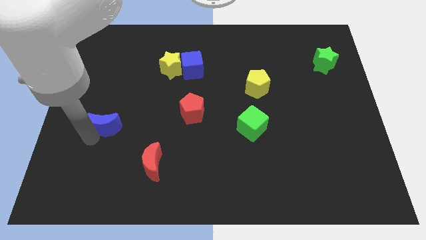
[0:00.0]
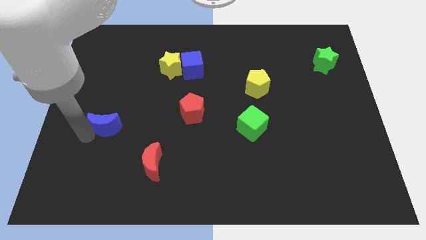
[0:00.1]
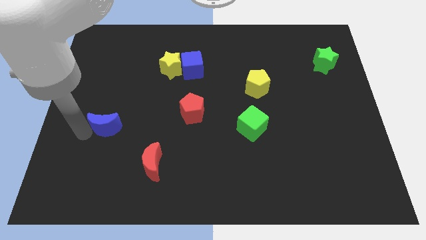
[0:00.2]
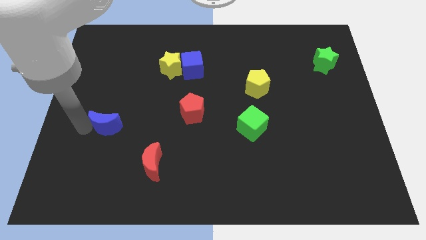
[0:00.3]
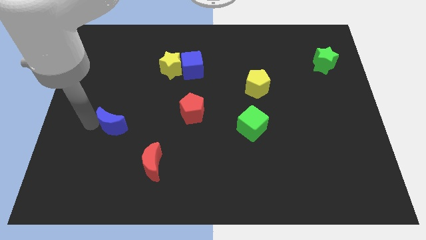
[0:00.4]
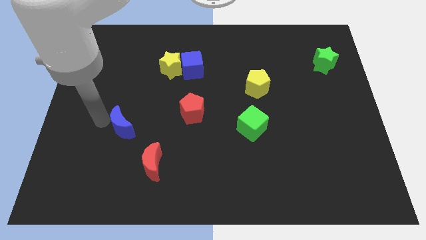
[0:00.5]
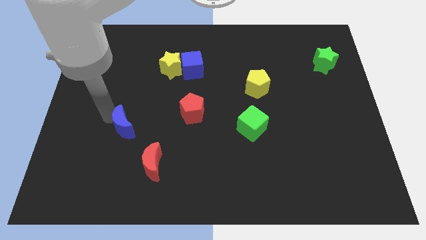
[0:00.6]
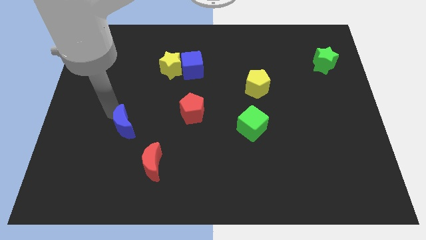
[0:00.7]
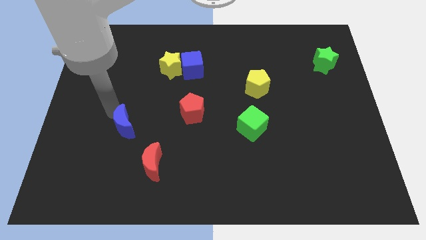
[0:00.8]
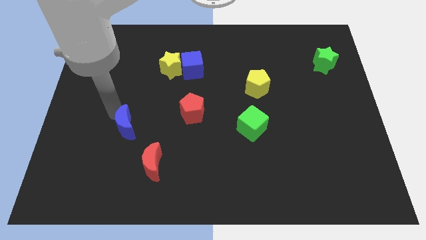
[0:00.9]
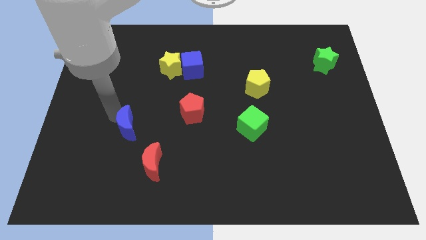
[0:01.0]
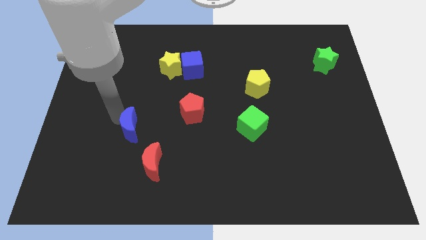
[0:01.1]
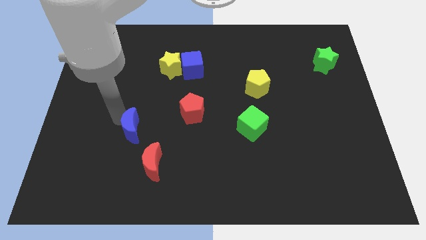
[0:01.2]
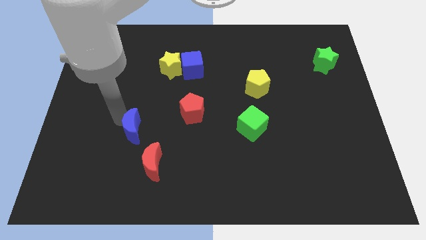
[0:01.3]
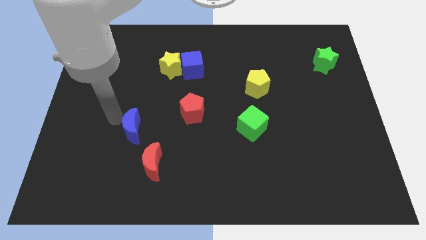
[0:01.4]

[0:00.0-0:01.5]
slightly move the blue moon close to the red moon

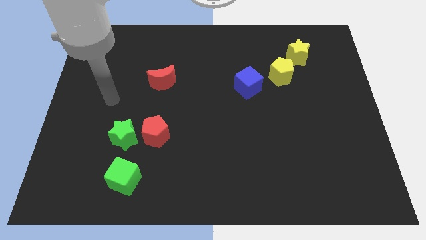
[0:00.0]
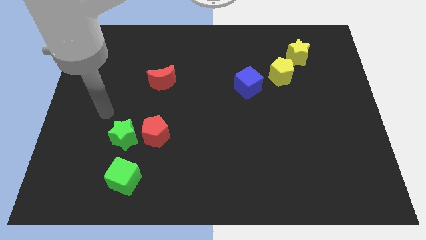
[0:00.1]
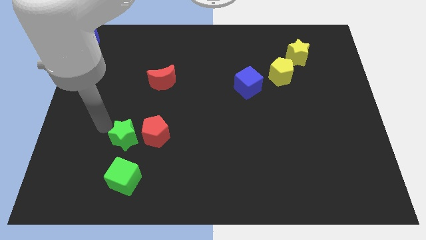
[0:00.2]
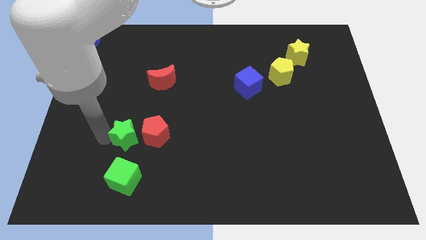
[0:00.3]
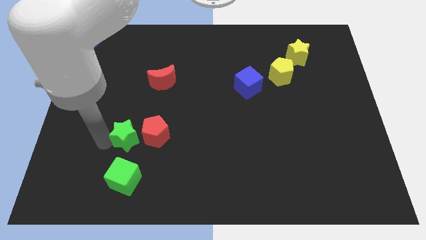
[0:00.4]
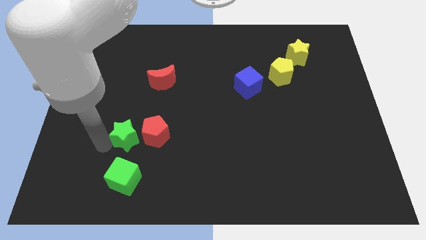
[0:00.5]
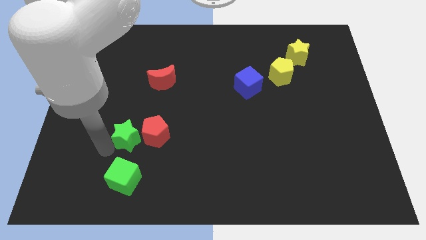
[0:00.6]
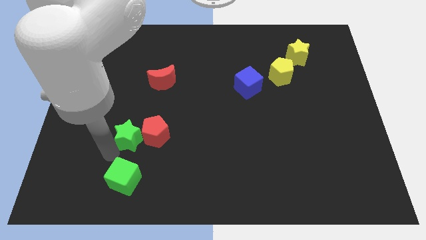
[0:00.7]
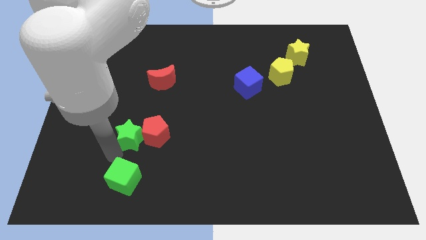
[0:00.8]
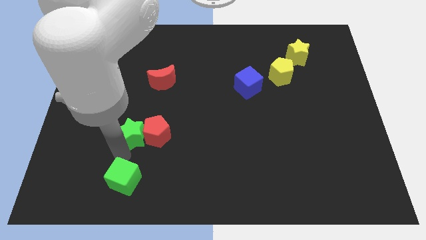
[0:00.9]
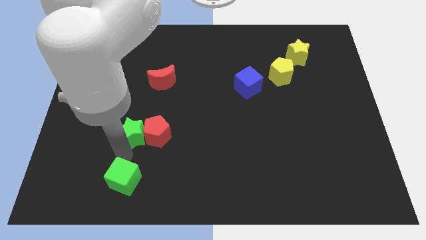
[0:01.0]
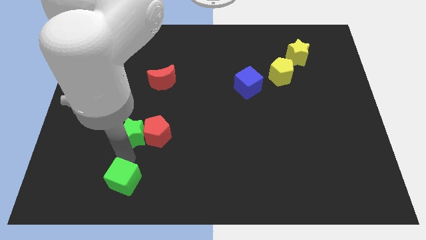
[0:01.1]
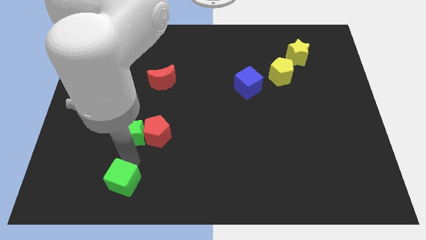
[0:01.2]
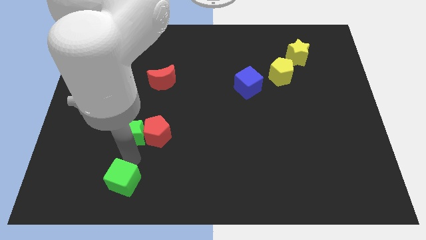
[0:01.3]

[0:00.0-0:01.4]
move the green star into the red pentagon

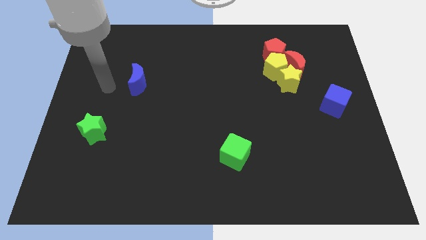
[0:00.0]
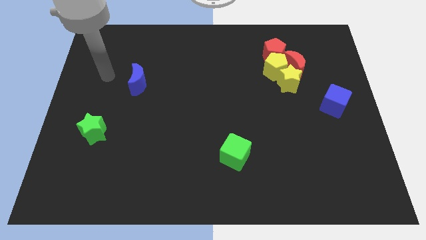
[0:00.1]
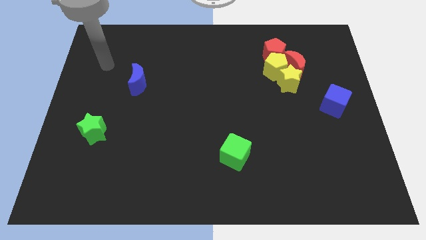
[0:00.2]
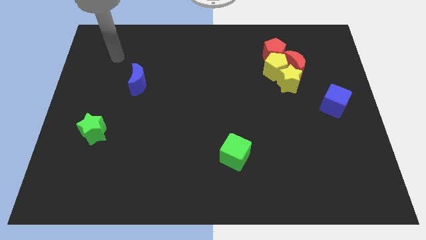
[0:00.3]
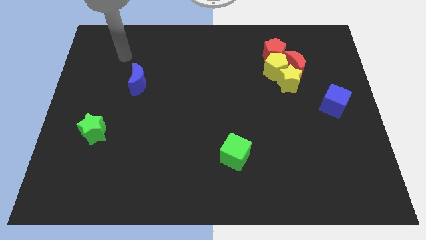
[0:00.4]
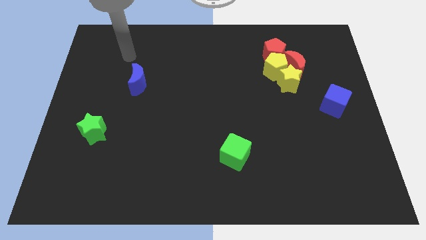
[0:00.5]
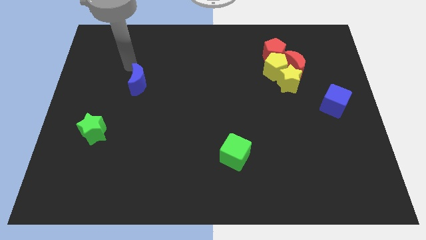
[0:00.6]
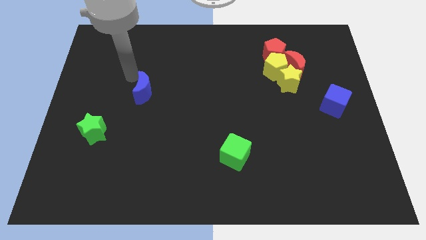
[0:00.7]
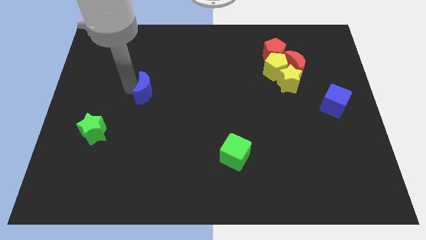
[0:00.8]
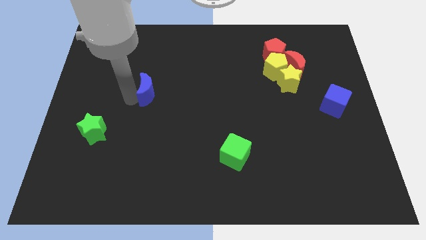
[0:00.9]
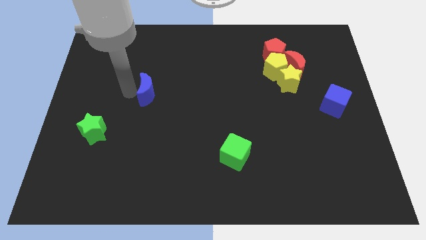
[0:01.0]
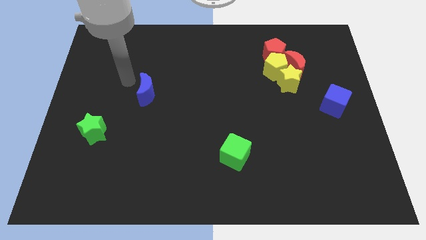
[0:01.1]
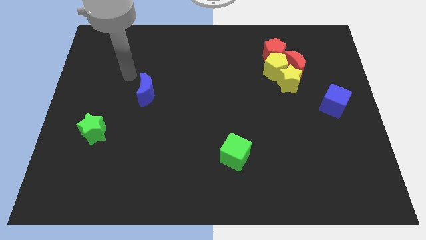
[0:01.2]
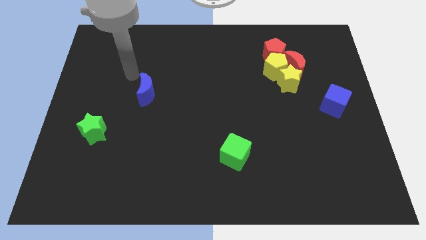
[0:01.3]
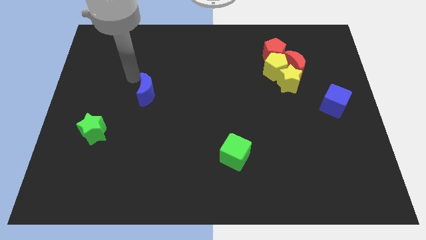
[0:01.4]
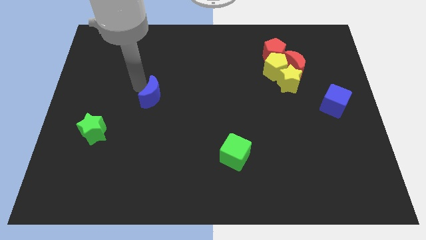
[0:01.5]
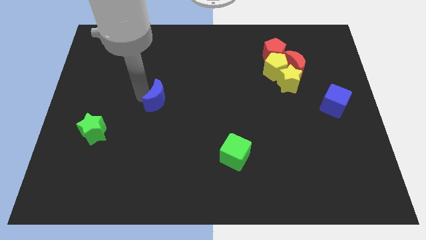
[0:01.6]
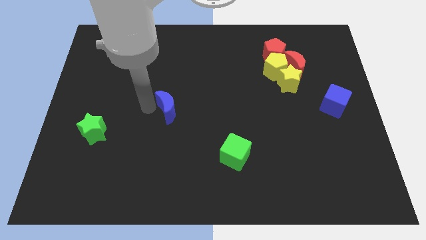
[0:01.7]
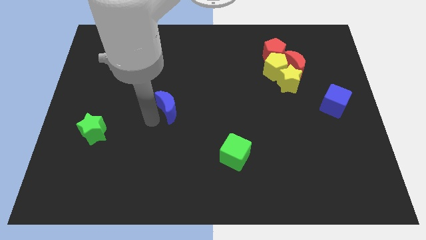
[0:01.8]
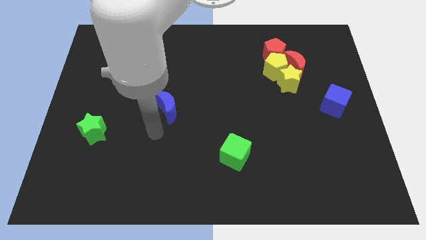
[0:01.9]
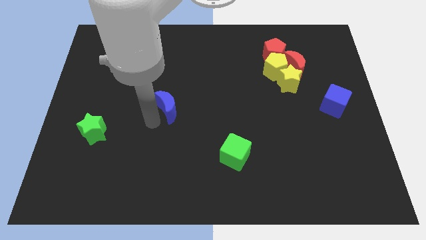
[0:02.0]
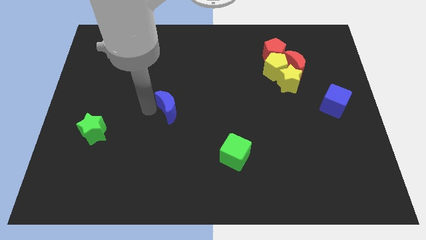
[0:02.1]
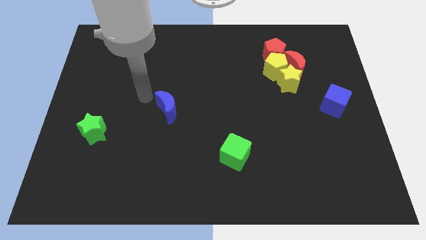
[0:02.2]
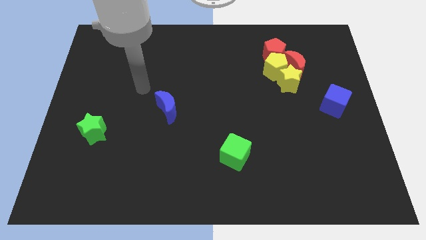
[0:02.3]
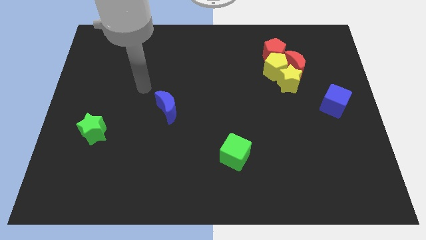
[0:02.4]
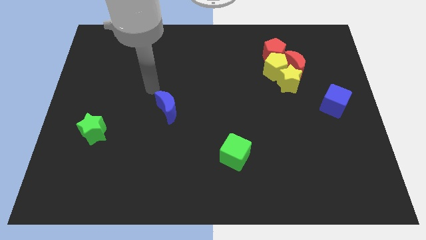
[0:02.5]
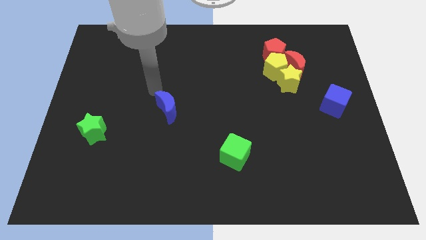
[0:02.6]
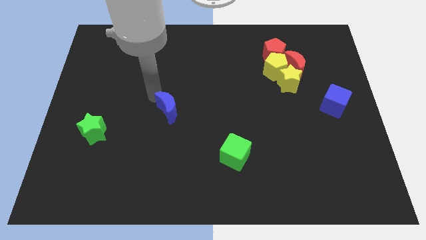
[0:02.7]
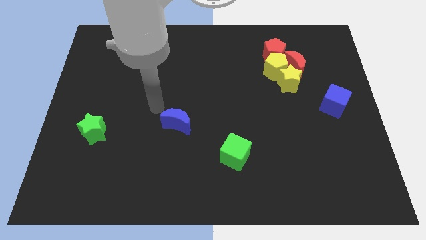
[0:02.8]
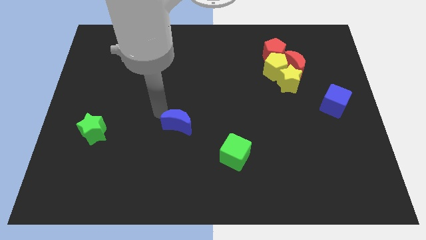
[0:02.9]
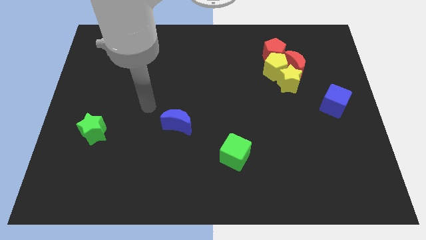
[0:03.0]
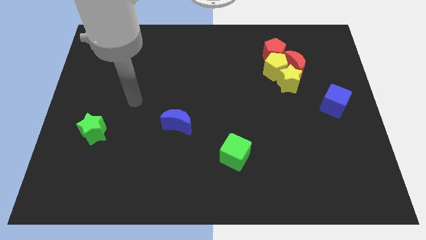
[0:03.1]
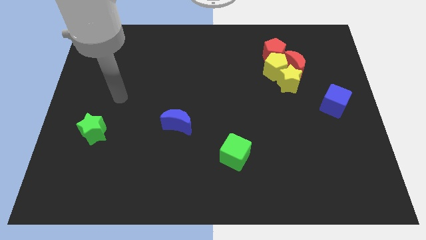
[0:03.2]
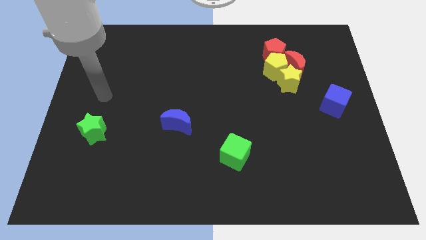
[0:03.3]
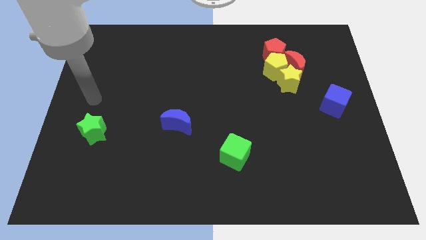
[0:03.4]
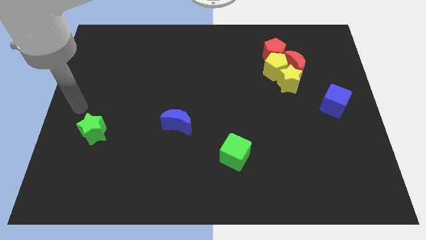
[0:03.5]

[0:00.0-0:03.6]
place the blue moon horizontally near to the green cube

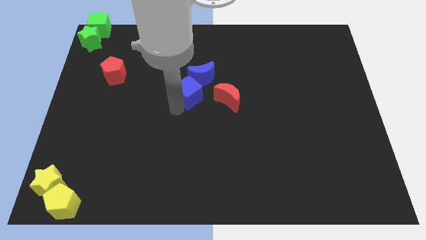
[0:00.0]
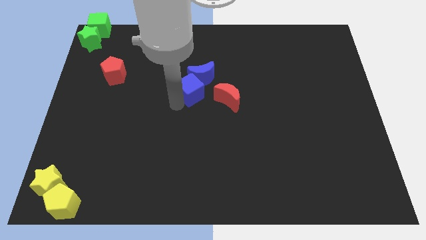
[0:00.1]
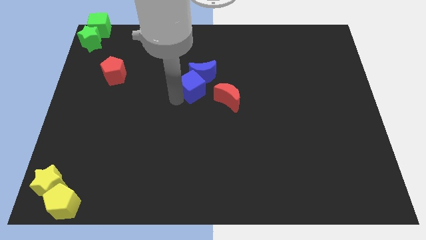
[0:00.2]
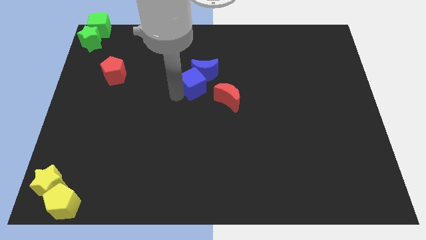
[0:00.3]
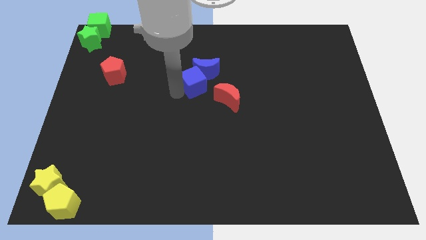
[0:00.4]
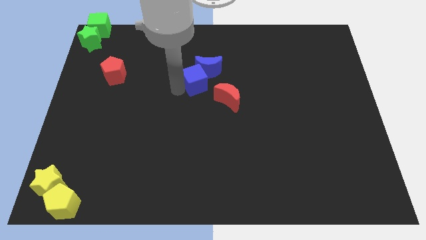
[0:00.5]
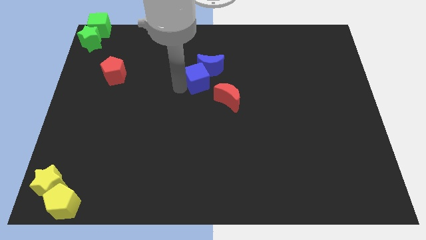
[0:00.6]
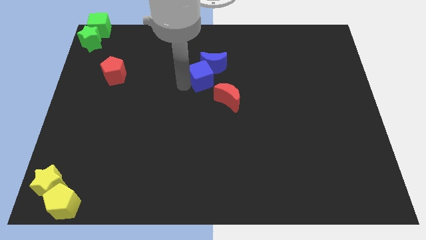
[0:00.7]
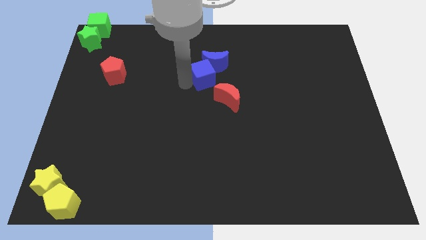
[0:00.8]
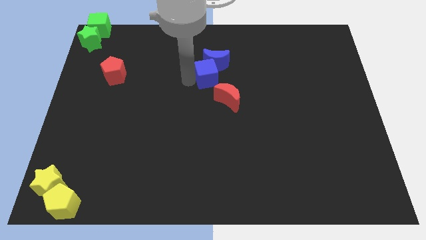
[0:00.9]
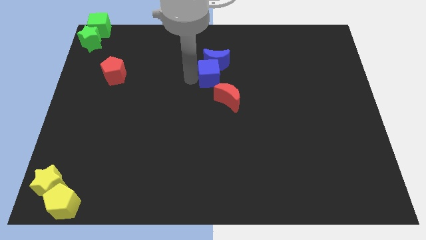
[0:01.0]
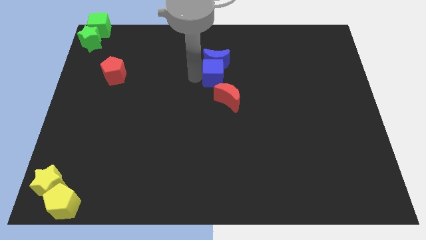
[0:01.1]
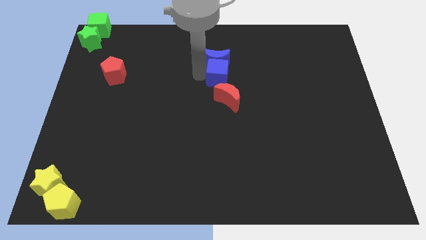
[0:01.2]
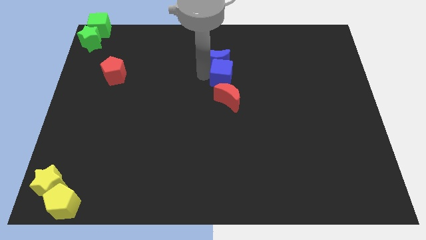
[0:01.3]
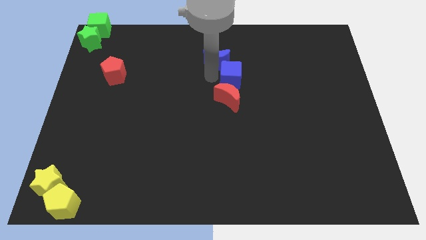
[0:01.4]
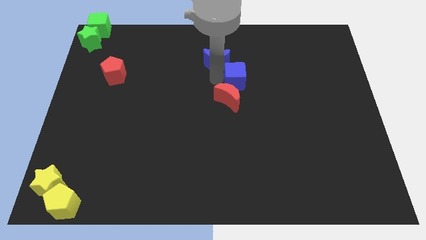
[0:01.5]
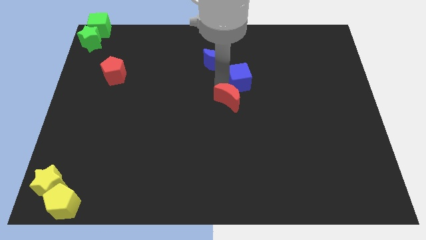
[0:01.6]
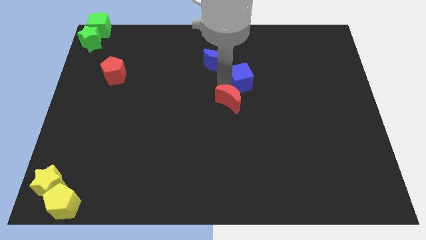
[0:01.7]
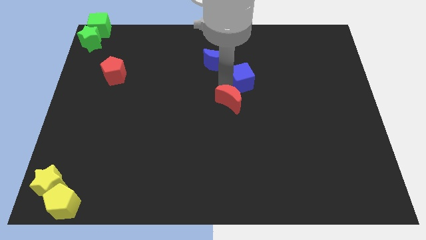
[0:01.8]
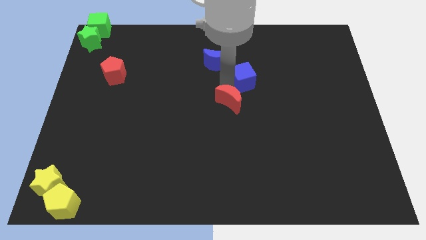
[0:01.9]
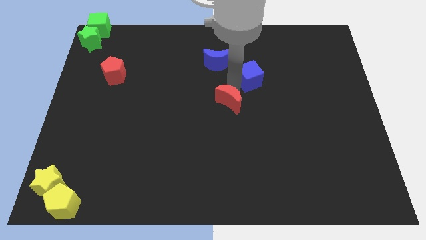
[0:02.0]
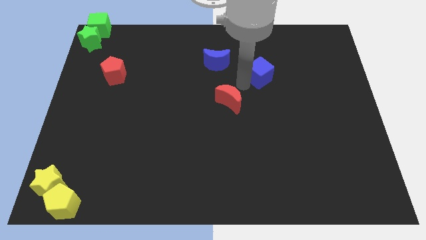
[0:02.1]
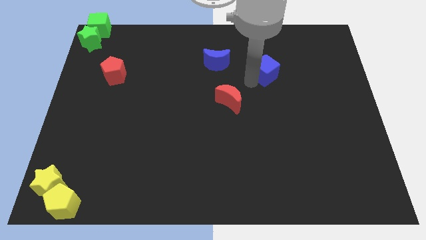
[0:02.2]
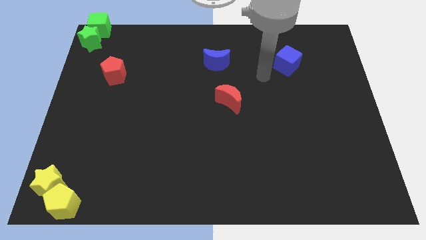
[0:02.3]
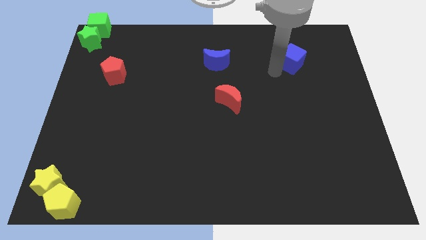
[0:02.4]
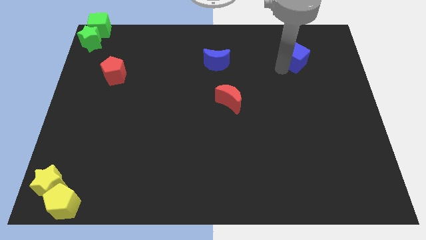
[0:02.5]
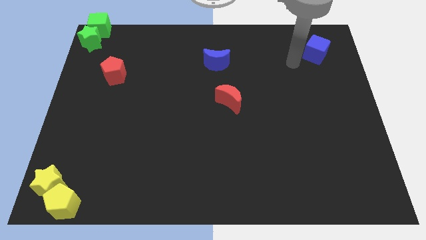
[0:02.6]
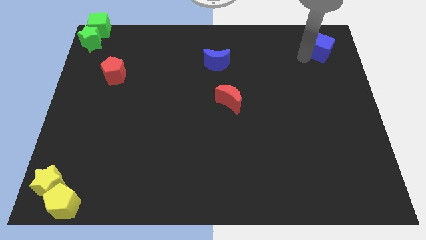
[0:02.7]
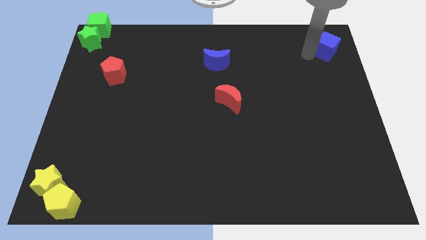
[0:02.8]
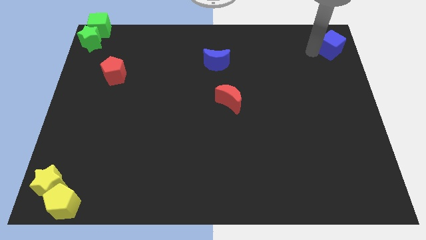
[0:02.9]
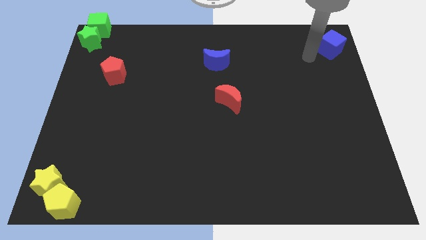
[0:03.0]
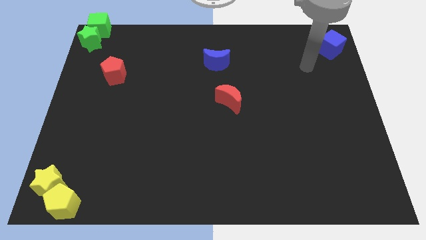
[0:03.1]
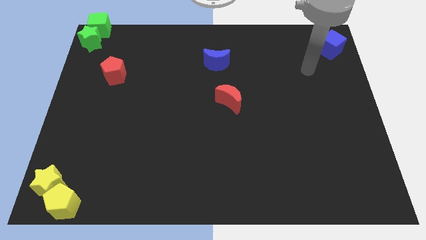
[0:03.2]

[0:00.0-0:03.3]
separate the blue cube from the blue moon
